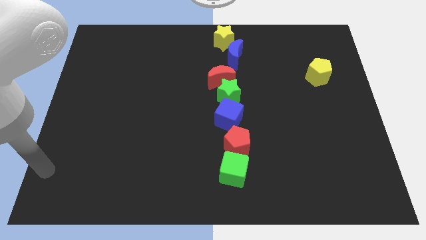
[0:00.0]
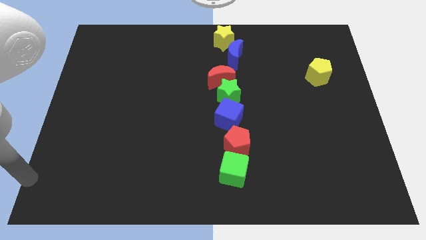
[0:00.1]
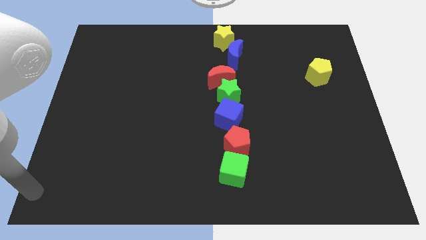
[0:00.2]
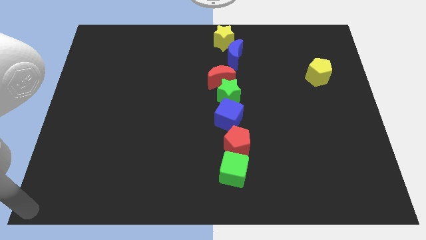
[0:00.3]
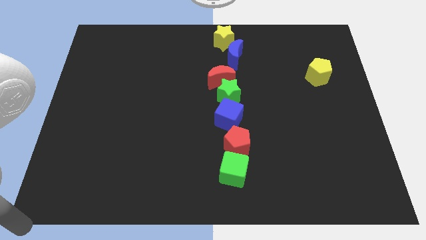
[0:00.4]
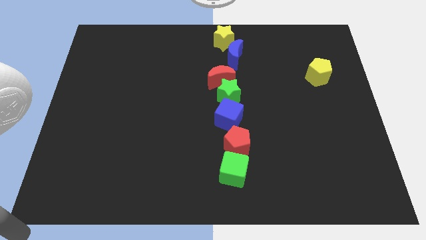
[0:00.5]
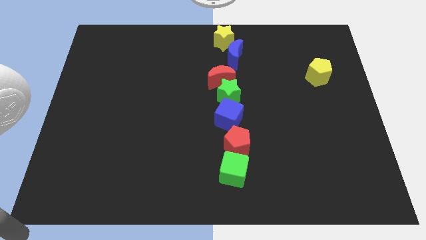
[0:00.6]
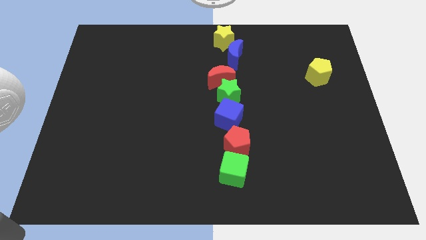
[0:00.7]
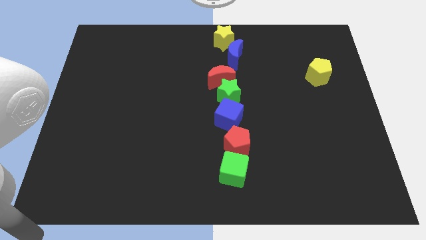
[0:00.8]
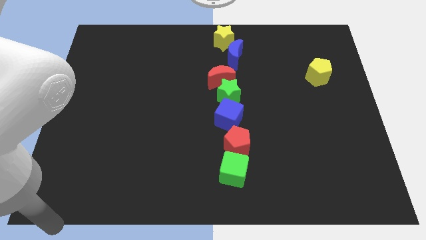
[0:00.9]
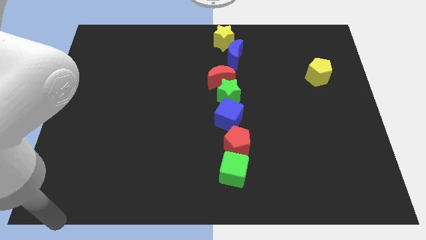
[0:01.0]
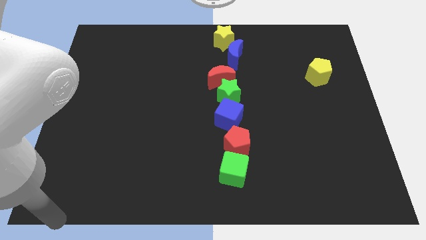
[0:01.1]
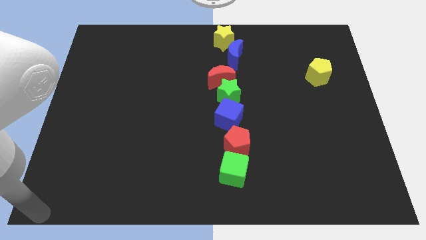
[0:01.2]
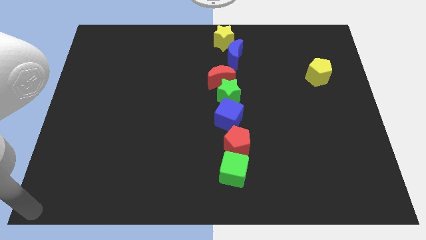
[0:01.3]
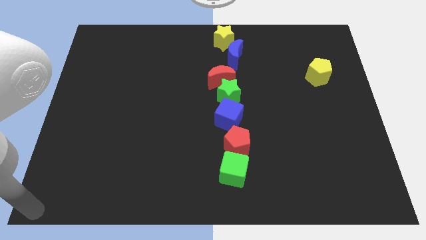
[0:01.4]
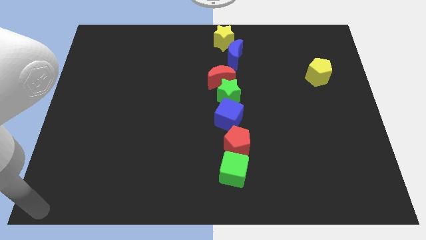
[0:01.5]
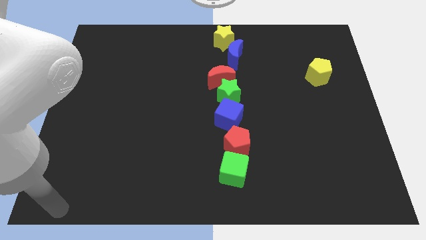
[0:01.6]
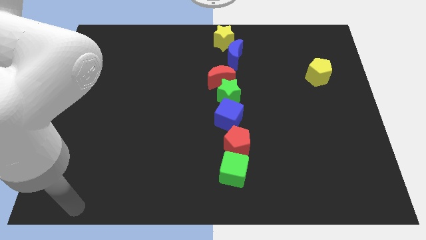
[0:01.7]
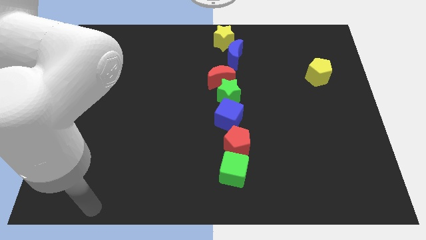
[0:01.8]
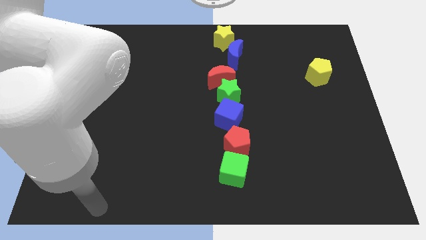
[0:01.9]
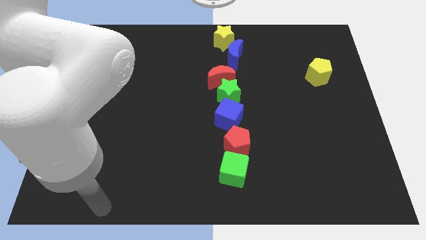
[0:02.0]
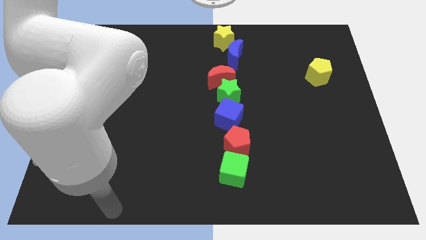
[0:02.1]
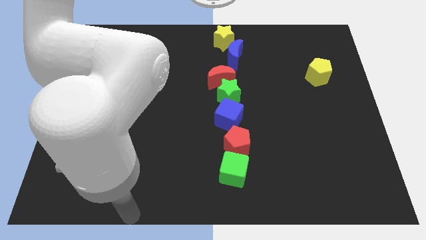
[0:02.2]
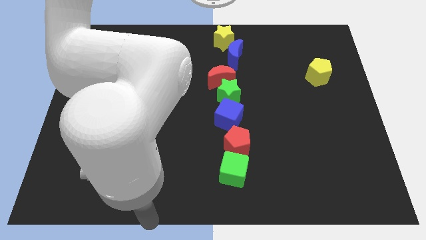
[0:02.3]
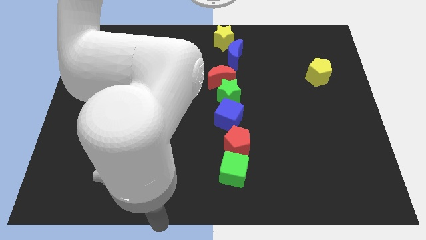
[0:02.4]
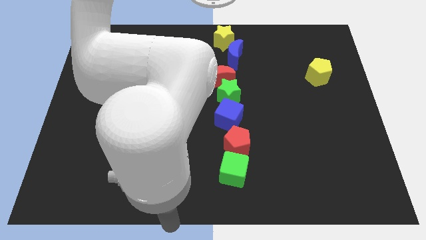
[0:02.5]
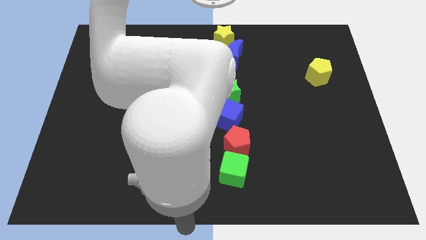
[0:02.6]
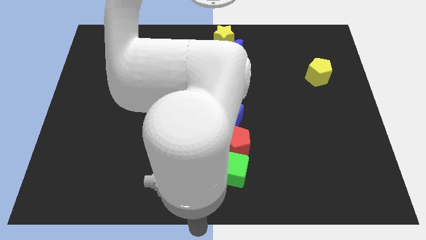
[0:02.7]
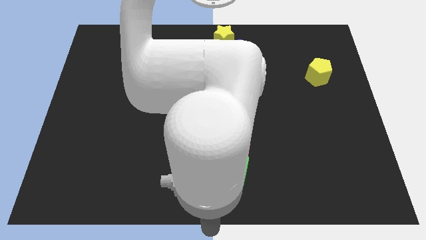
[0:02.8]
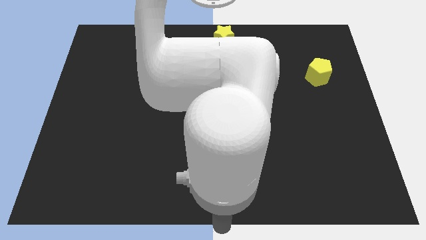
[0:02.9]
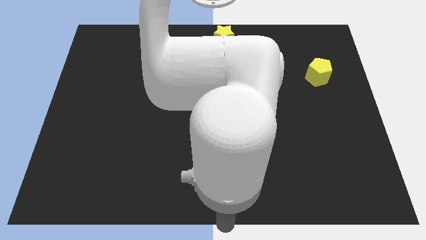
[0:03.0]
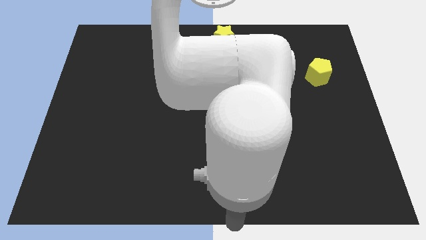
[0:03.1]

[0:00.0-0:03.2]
place your arm below the green cube

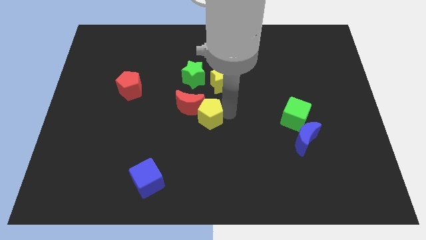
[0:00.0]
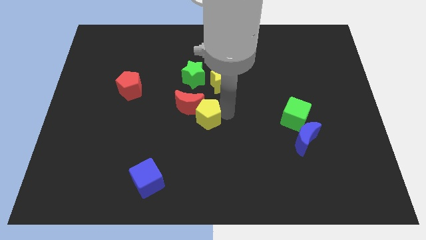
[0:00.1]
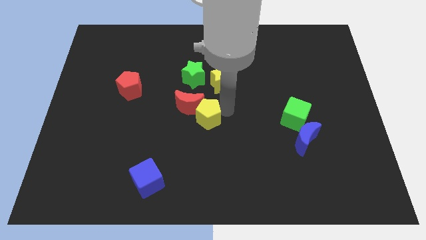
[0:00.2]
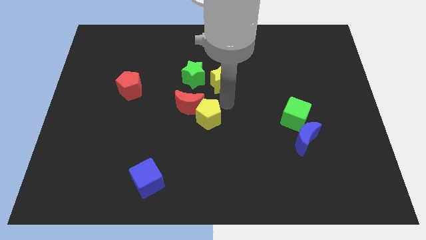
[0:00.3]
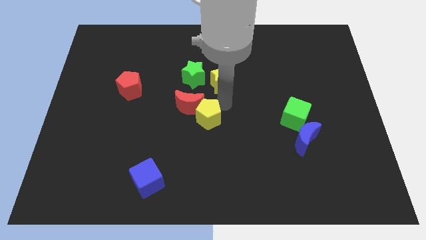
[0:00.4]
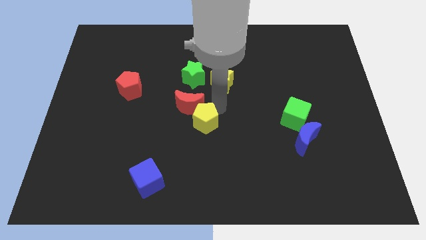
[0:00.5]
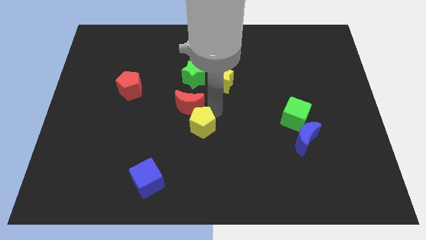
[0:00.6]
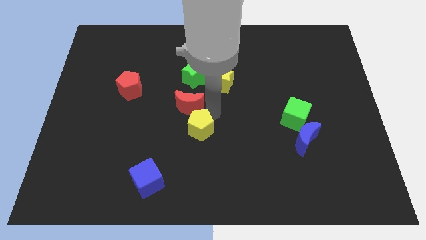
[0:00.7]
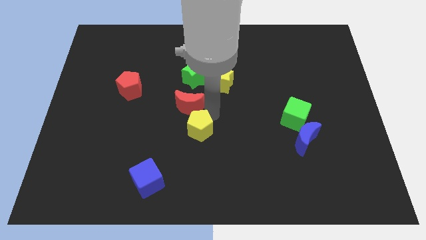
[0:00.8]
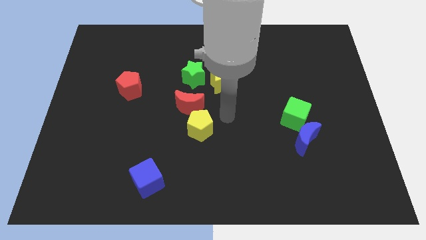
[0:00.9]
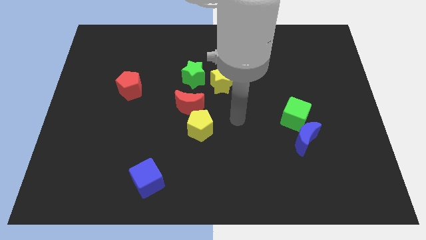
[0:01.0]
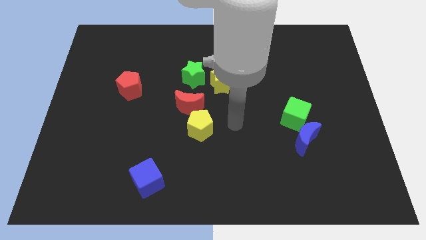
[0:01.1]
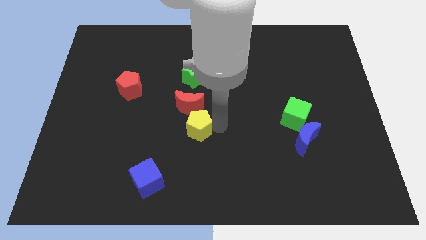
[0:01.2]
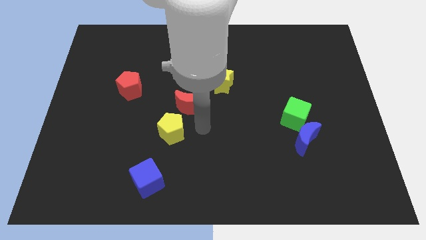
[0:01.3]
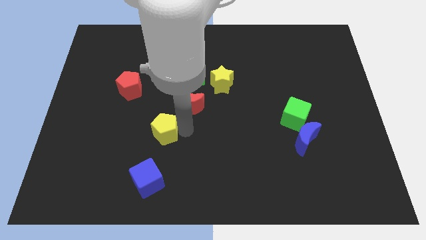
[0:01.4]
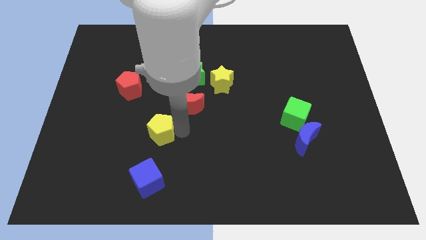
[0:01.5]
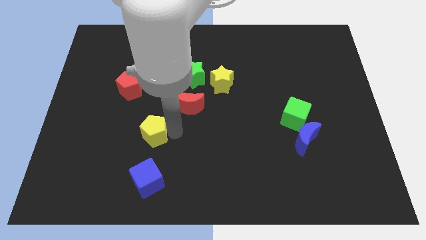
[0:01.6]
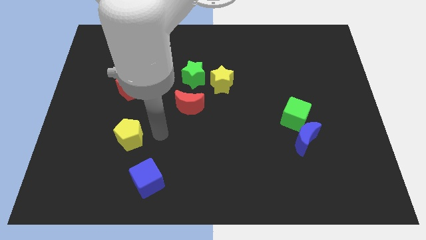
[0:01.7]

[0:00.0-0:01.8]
move the yellow pentagon to the bottom left of the red crescent

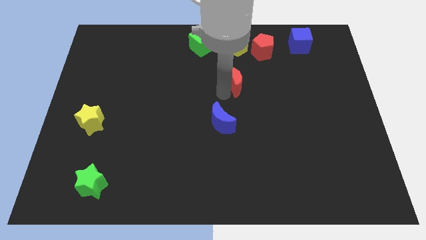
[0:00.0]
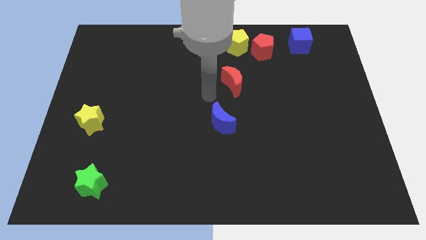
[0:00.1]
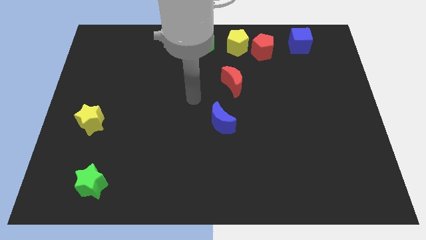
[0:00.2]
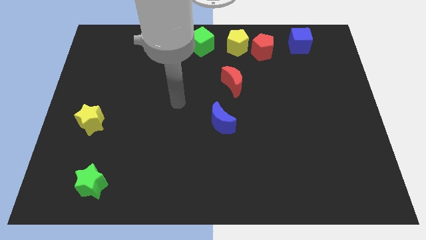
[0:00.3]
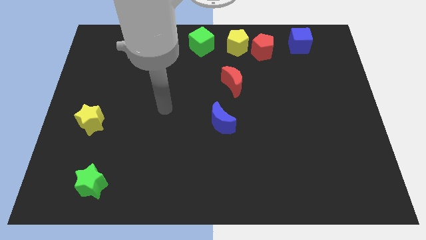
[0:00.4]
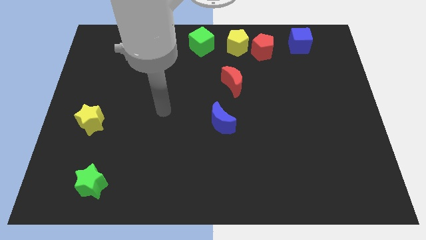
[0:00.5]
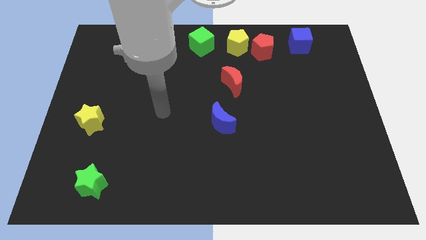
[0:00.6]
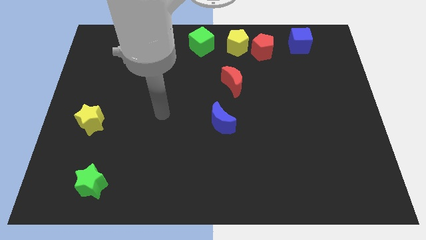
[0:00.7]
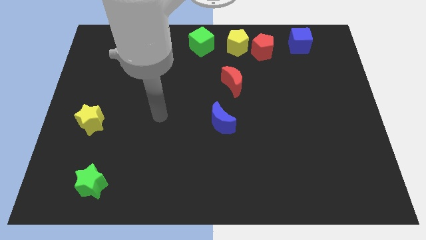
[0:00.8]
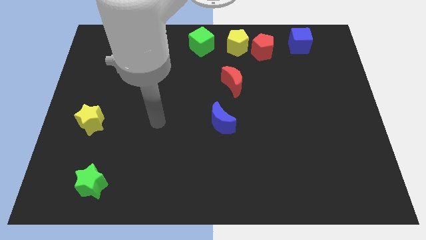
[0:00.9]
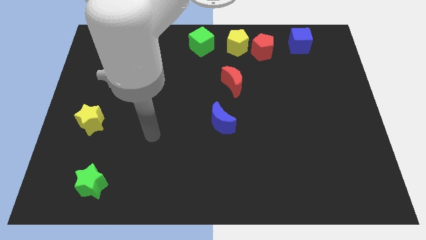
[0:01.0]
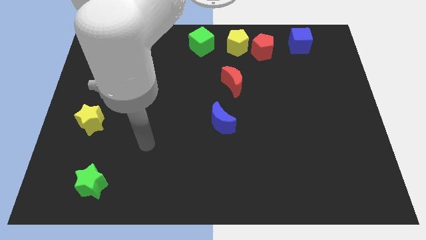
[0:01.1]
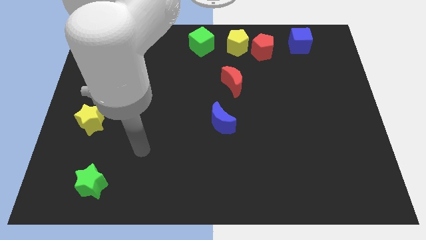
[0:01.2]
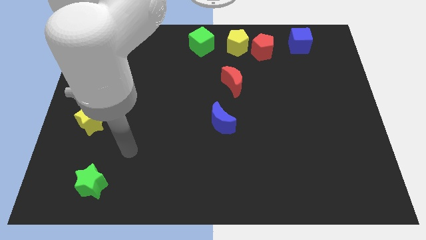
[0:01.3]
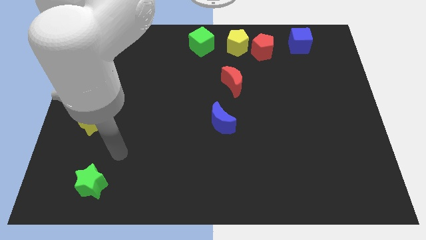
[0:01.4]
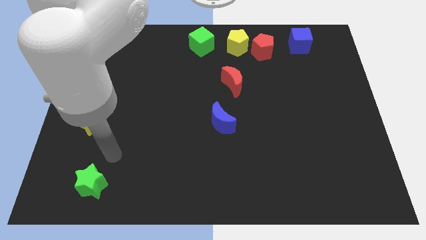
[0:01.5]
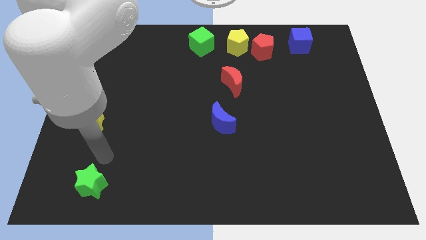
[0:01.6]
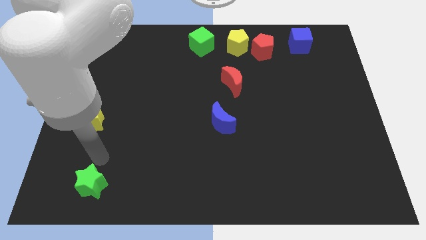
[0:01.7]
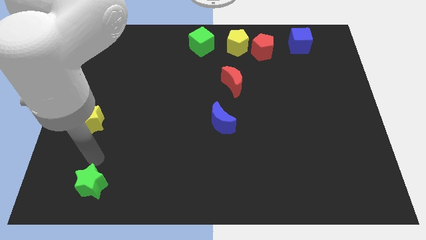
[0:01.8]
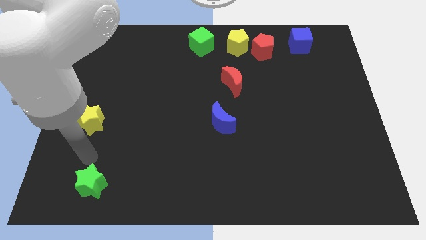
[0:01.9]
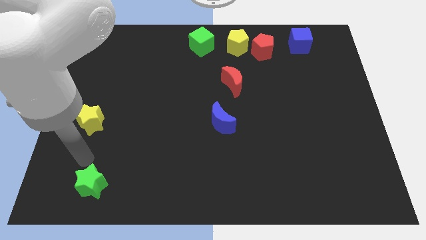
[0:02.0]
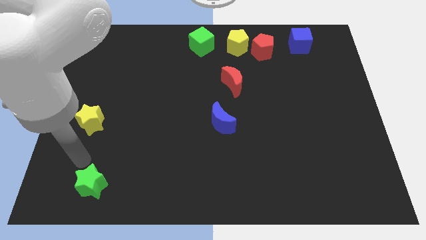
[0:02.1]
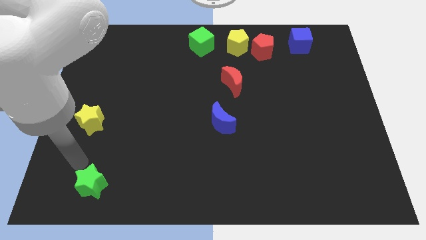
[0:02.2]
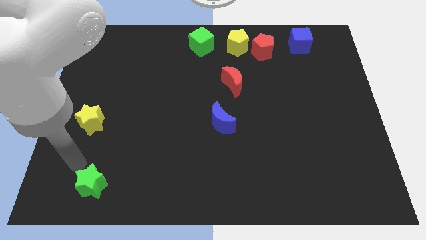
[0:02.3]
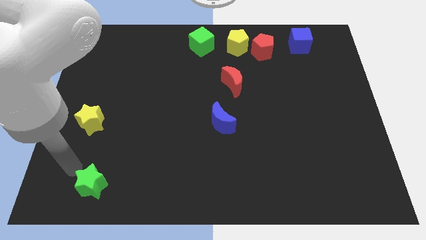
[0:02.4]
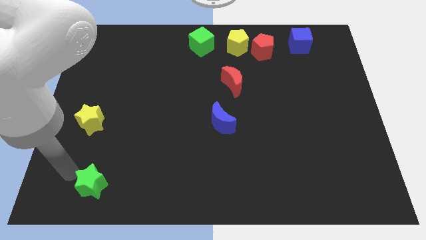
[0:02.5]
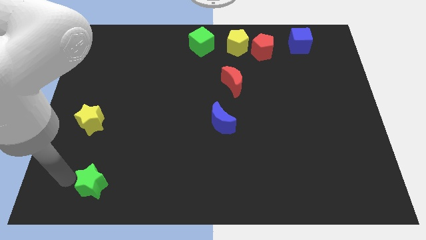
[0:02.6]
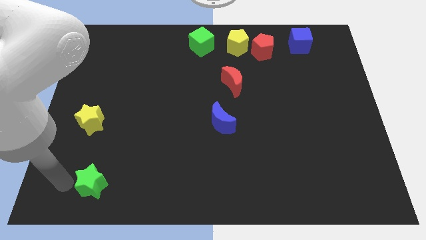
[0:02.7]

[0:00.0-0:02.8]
move your arm away from the red moon

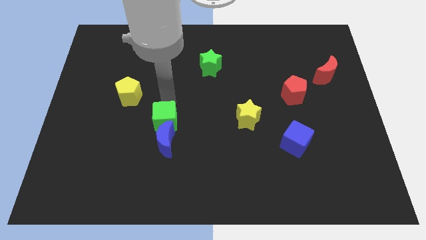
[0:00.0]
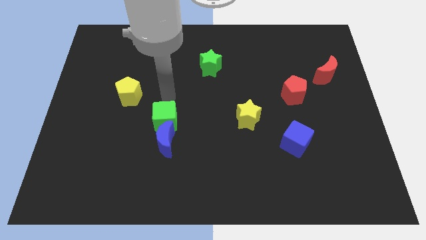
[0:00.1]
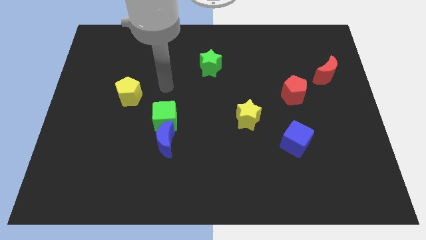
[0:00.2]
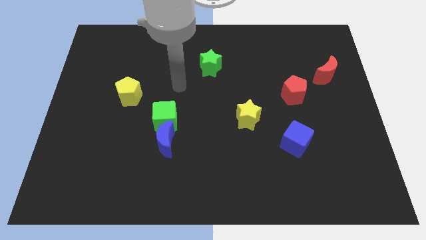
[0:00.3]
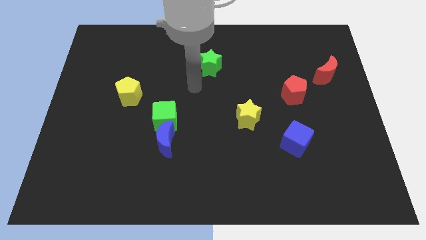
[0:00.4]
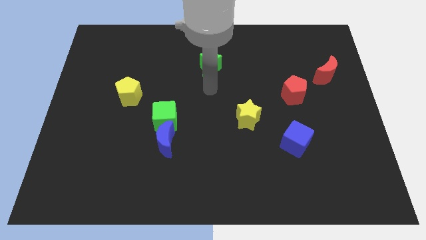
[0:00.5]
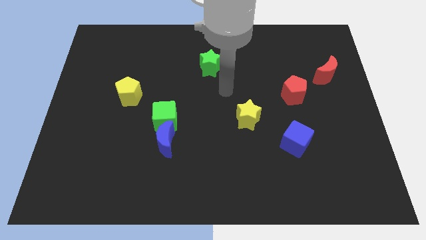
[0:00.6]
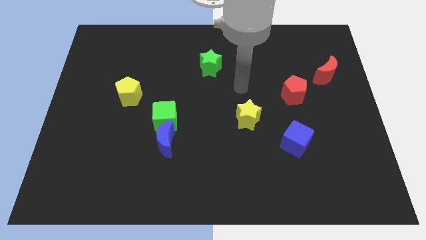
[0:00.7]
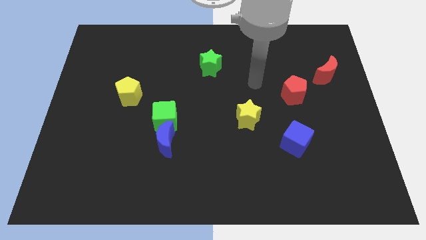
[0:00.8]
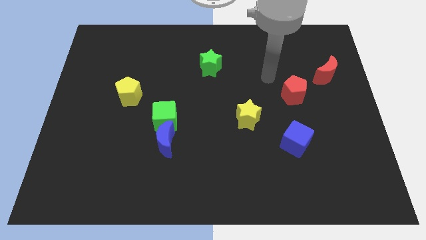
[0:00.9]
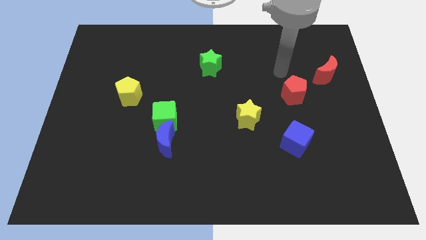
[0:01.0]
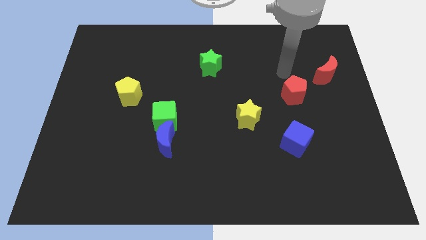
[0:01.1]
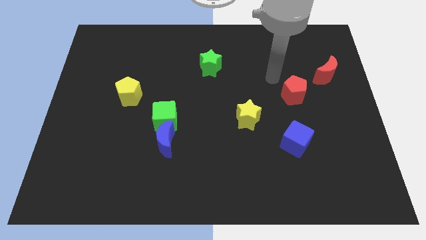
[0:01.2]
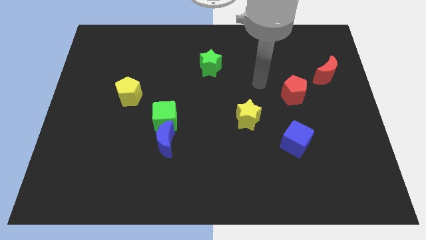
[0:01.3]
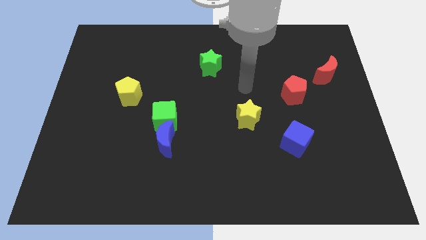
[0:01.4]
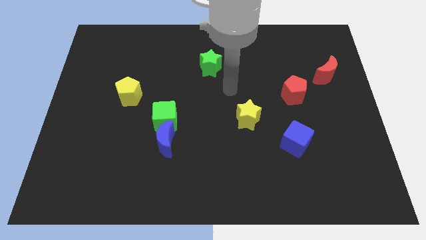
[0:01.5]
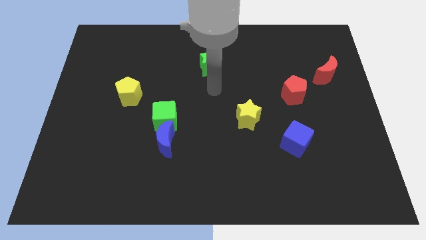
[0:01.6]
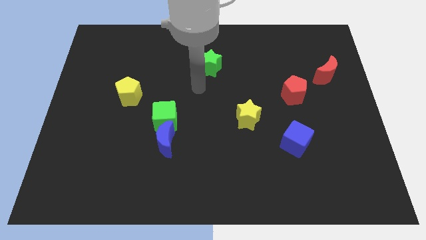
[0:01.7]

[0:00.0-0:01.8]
move yourself away from the green cube
